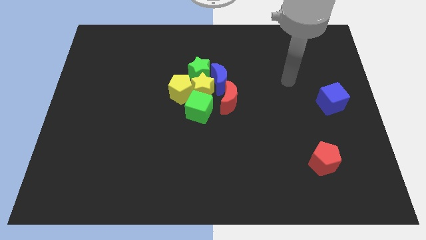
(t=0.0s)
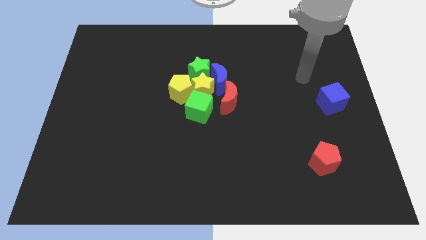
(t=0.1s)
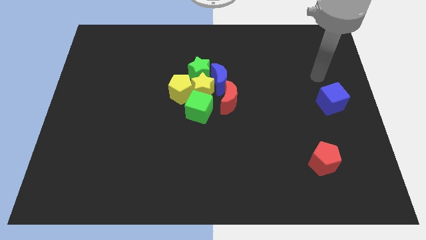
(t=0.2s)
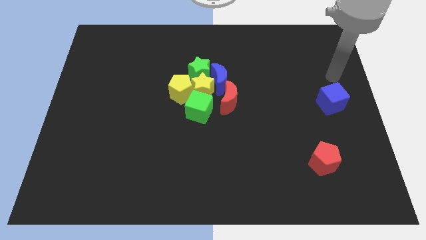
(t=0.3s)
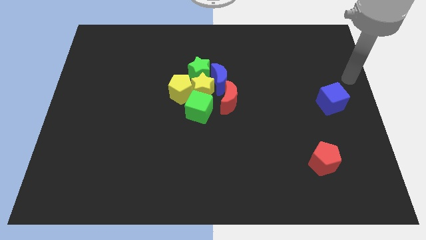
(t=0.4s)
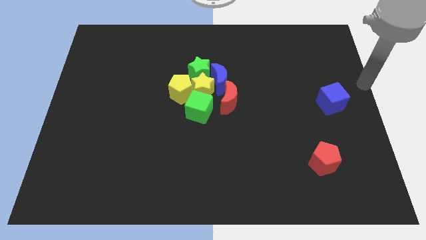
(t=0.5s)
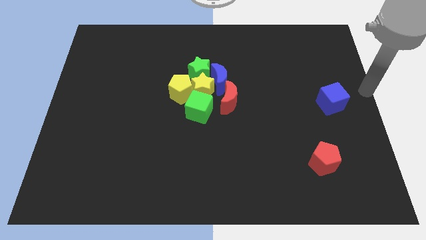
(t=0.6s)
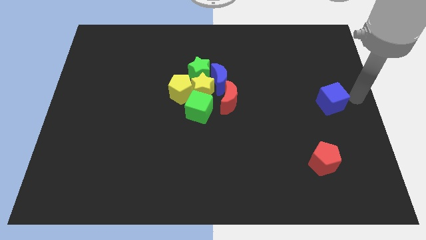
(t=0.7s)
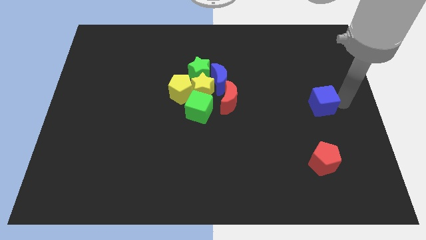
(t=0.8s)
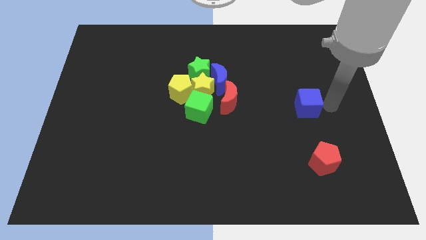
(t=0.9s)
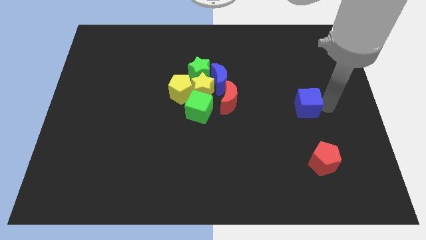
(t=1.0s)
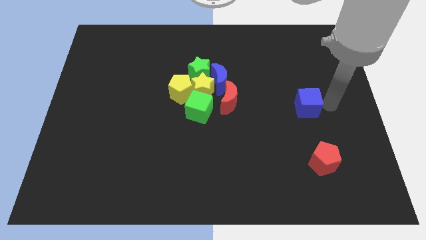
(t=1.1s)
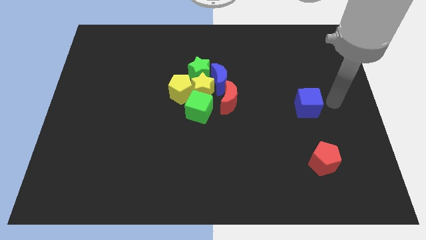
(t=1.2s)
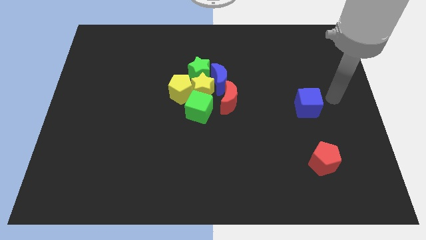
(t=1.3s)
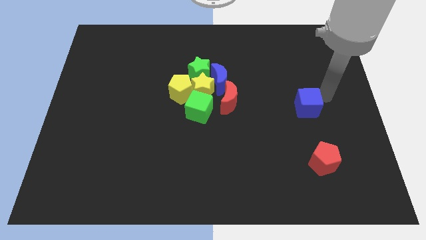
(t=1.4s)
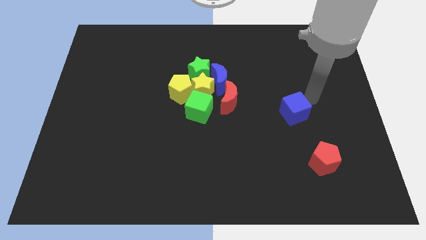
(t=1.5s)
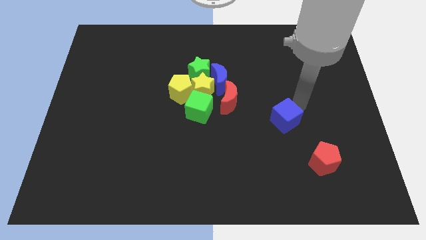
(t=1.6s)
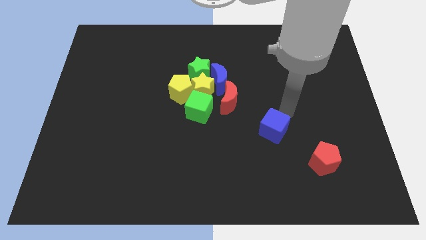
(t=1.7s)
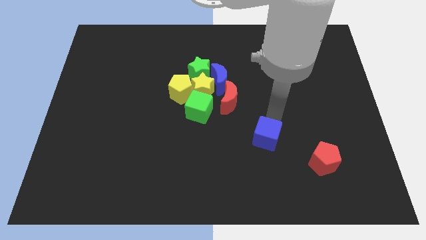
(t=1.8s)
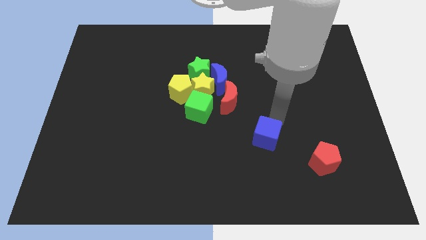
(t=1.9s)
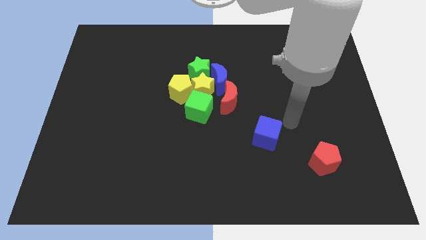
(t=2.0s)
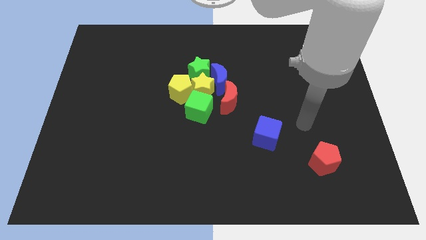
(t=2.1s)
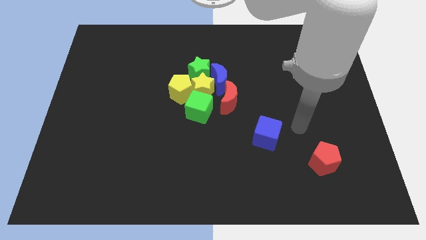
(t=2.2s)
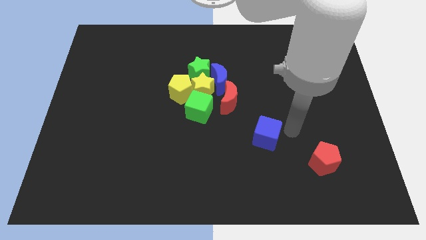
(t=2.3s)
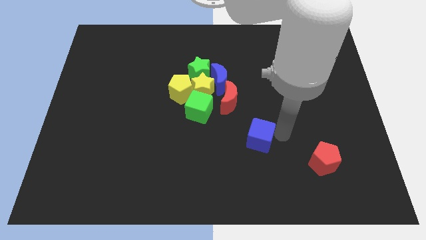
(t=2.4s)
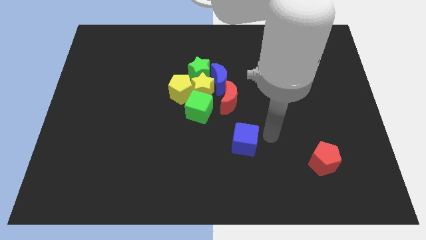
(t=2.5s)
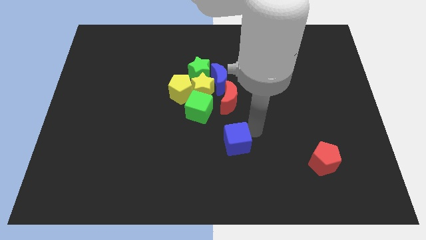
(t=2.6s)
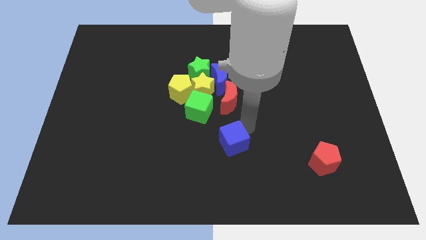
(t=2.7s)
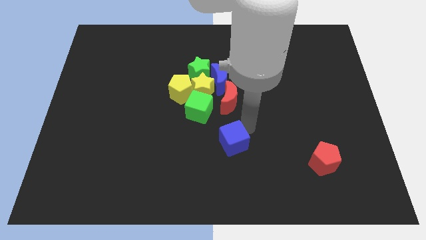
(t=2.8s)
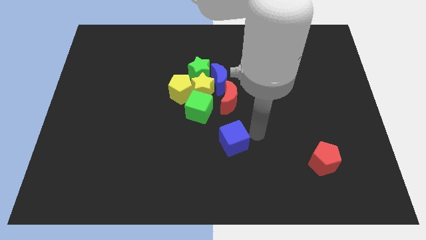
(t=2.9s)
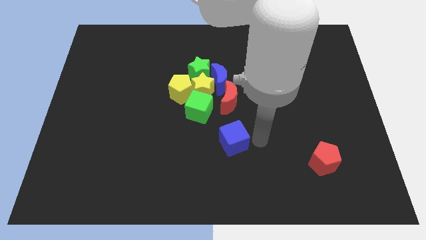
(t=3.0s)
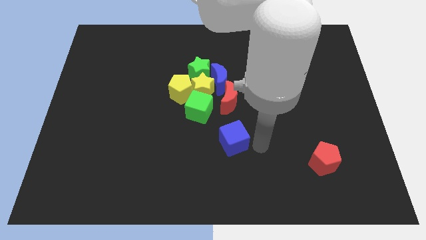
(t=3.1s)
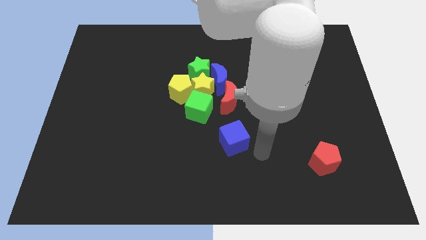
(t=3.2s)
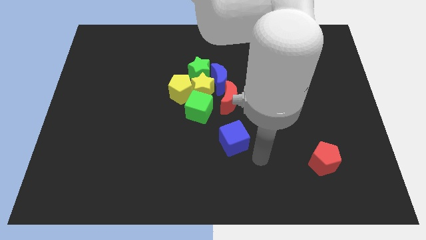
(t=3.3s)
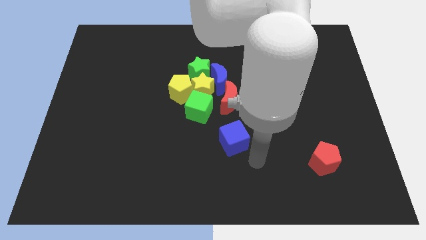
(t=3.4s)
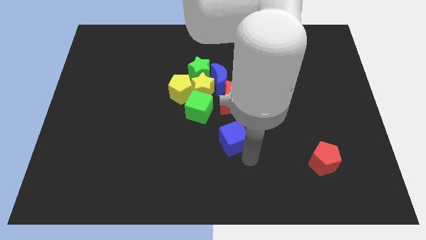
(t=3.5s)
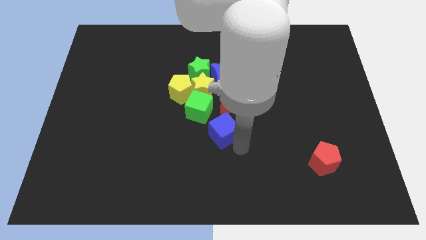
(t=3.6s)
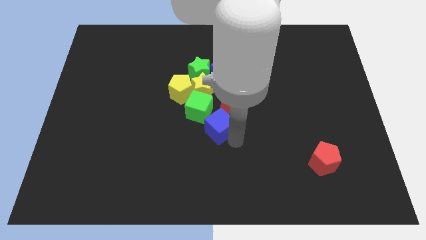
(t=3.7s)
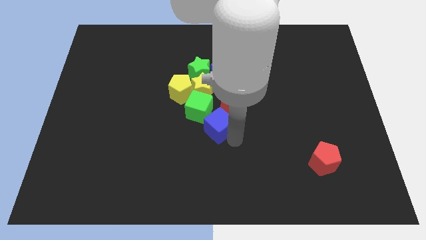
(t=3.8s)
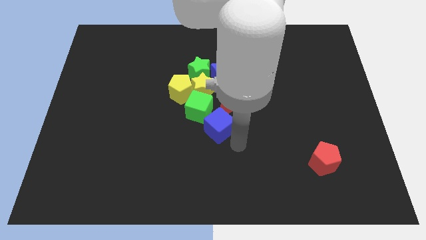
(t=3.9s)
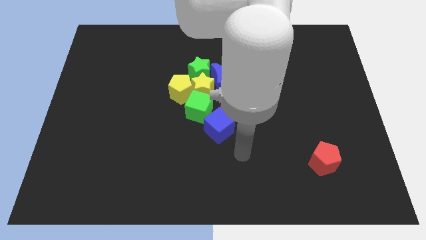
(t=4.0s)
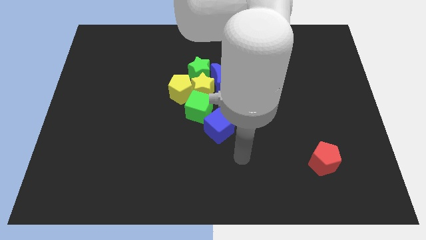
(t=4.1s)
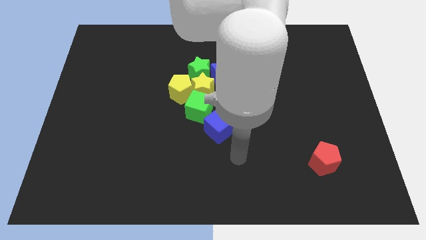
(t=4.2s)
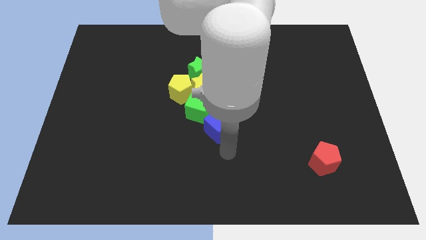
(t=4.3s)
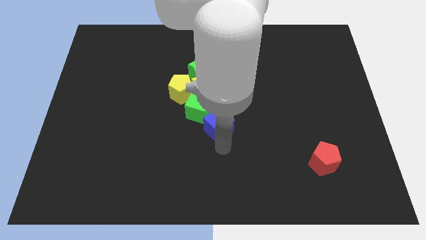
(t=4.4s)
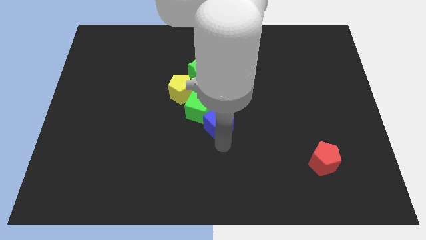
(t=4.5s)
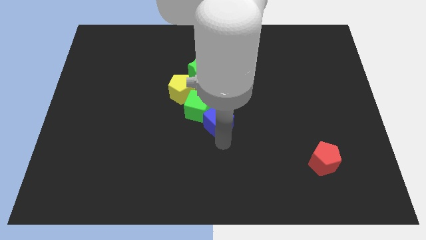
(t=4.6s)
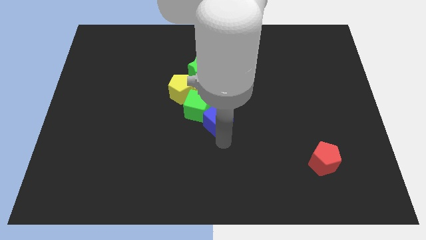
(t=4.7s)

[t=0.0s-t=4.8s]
drag blue cube into group of blocks

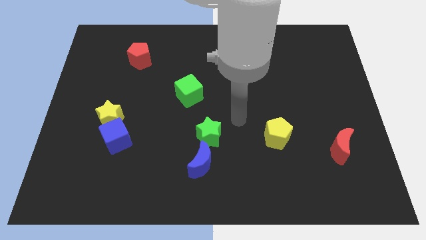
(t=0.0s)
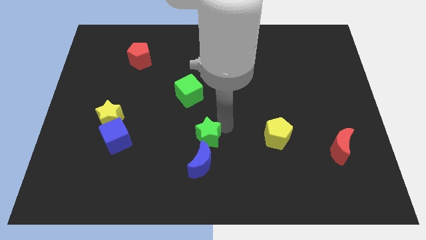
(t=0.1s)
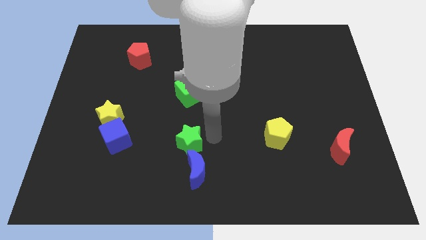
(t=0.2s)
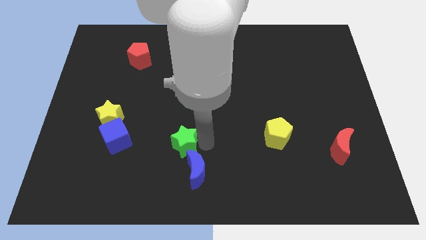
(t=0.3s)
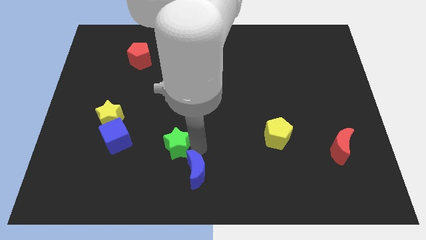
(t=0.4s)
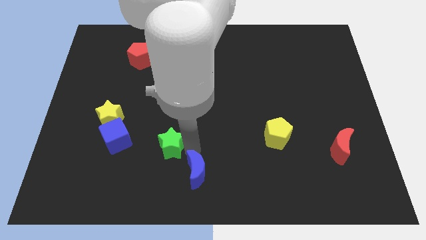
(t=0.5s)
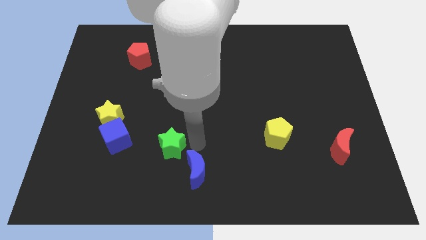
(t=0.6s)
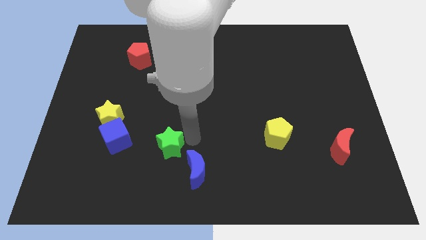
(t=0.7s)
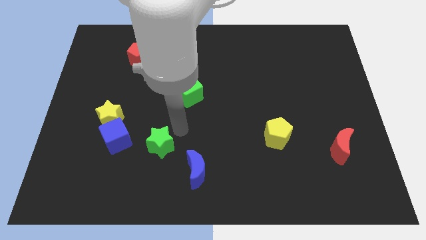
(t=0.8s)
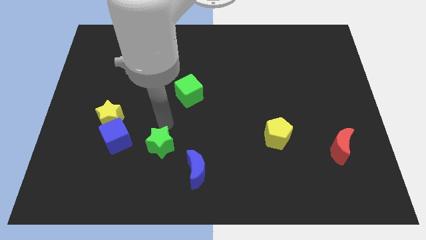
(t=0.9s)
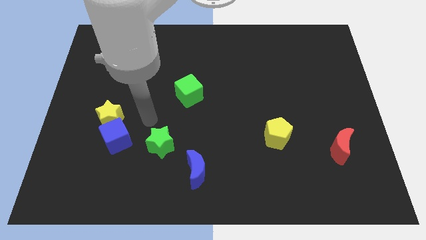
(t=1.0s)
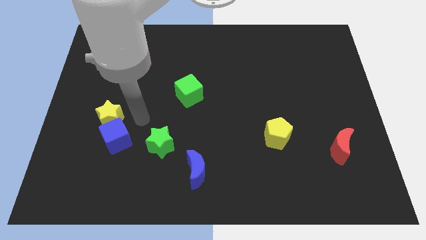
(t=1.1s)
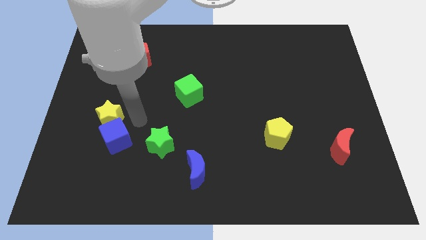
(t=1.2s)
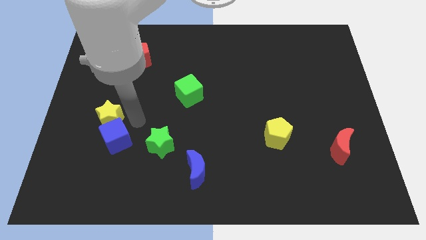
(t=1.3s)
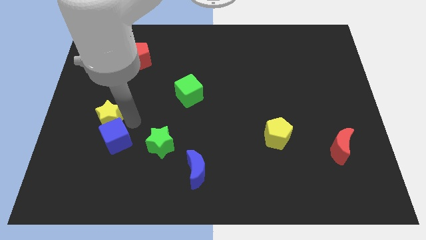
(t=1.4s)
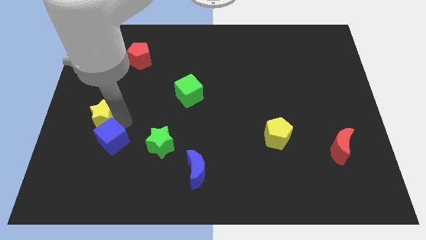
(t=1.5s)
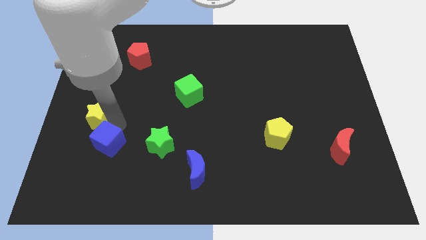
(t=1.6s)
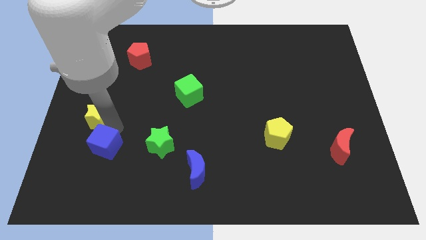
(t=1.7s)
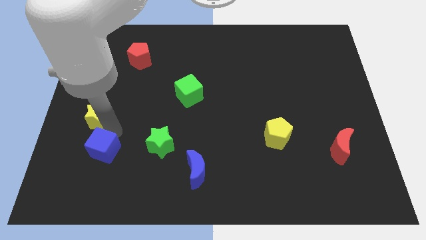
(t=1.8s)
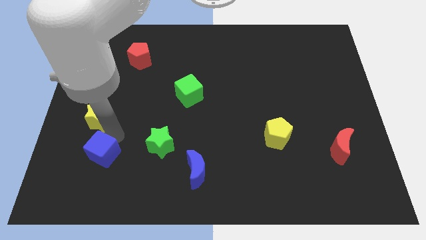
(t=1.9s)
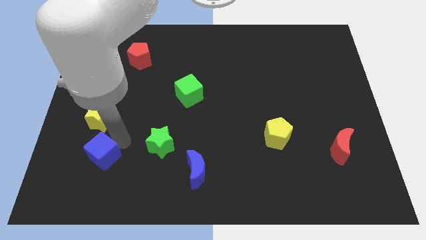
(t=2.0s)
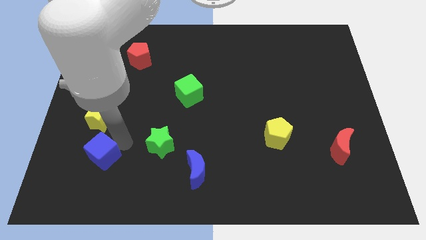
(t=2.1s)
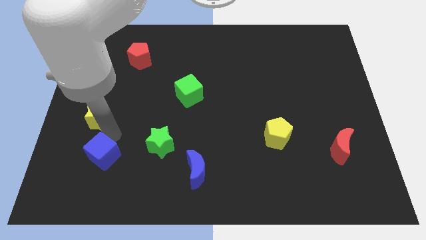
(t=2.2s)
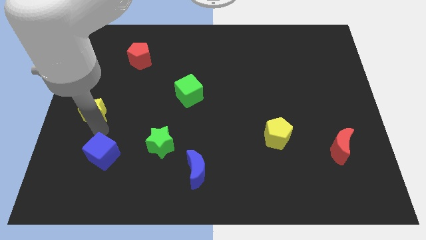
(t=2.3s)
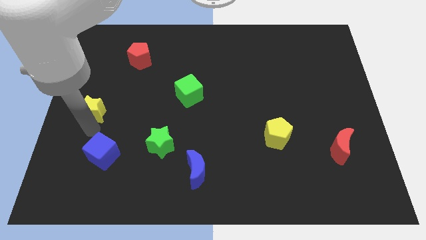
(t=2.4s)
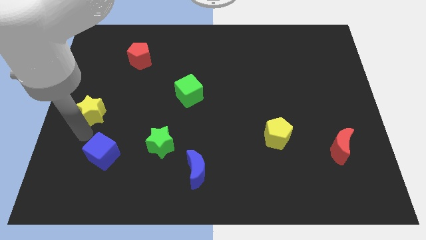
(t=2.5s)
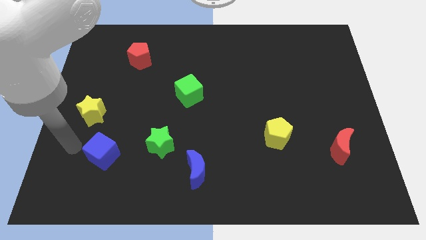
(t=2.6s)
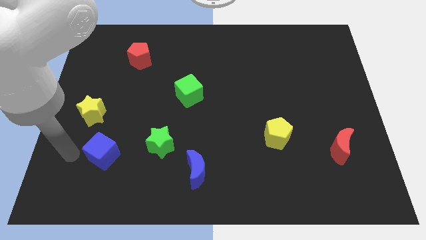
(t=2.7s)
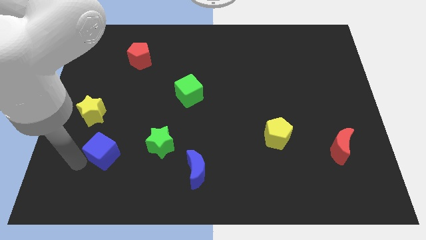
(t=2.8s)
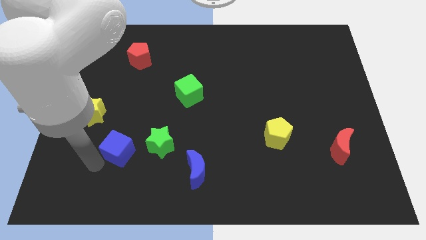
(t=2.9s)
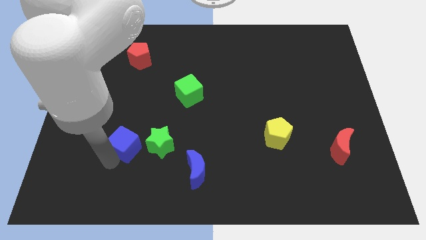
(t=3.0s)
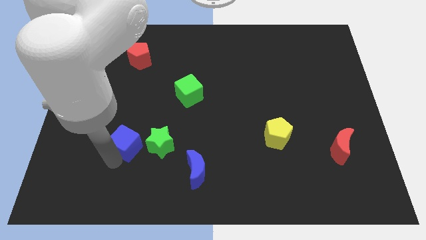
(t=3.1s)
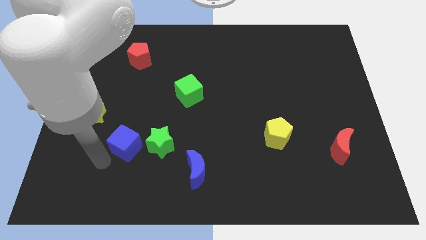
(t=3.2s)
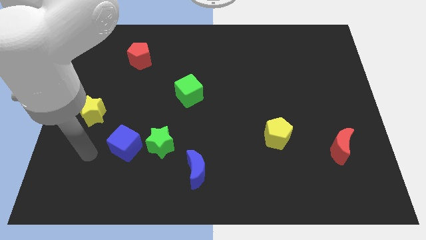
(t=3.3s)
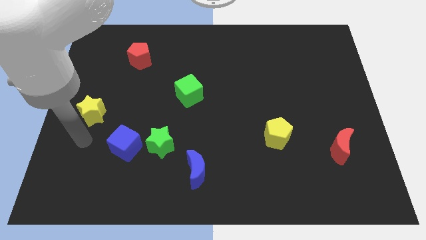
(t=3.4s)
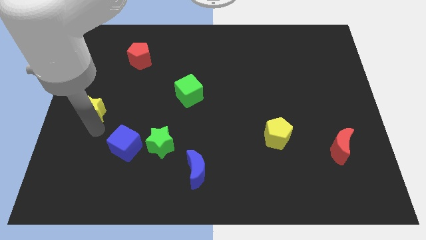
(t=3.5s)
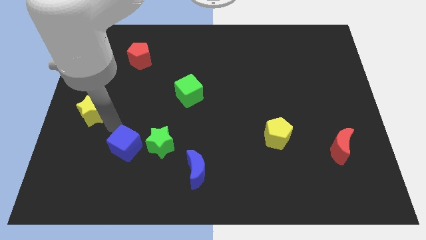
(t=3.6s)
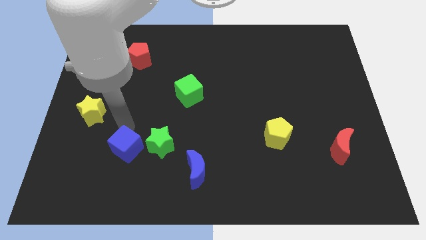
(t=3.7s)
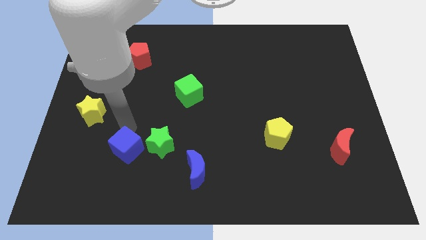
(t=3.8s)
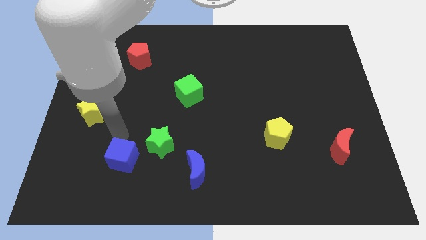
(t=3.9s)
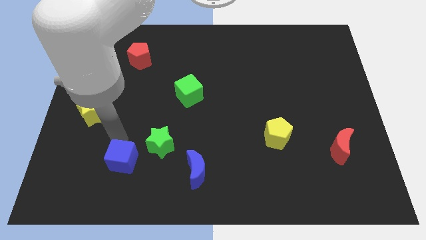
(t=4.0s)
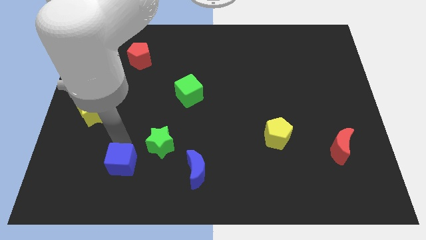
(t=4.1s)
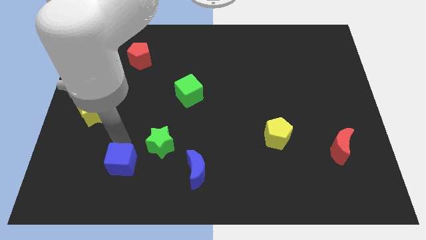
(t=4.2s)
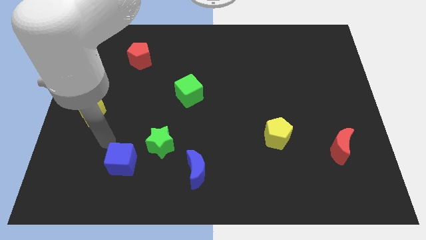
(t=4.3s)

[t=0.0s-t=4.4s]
place the blue cube left to the green star
